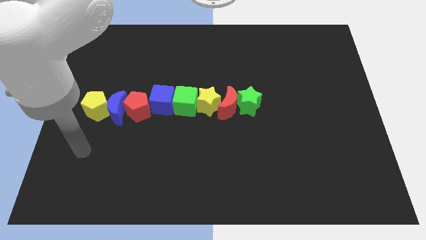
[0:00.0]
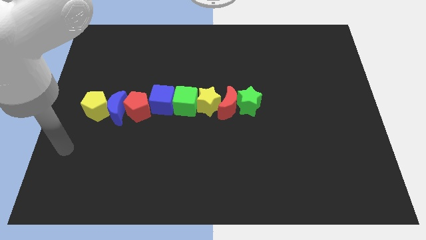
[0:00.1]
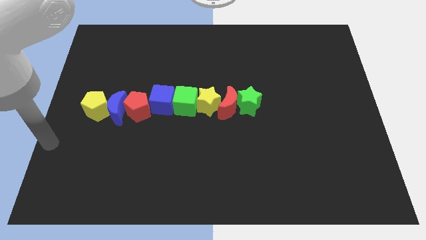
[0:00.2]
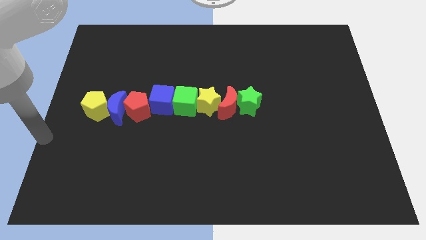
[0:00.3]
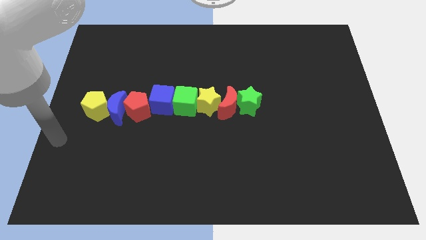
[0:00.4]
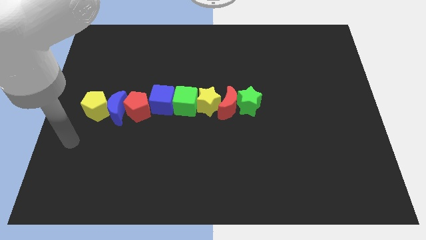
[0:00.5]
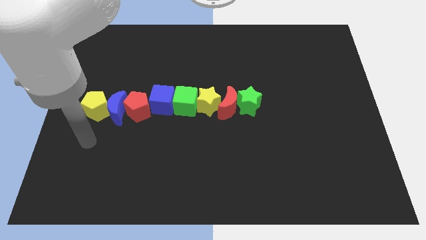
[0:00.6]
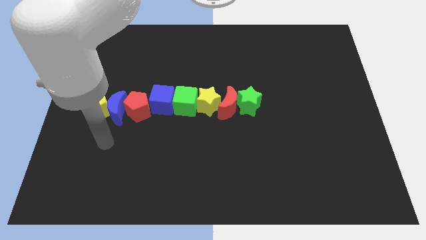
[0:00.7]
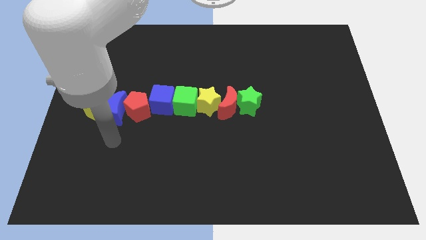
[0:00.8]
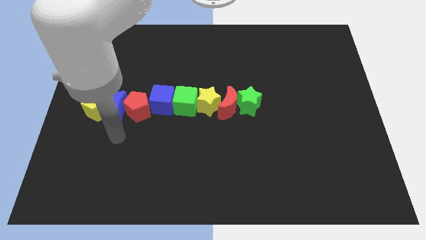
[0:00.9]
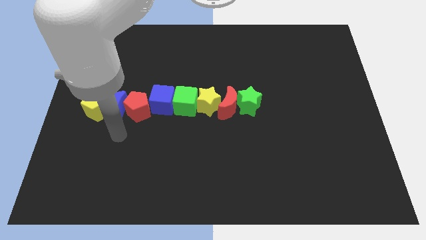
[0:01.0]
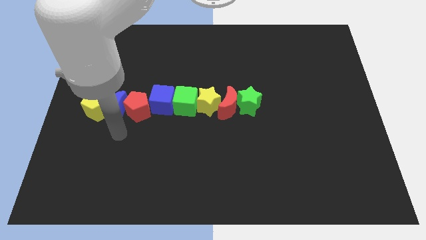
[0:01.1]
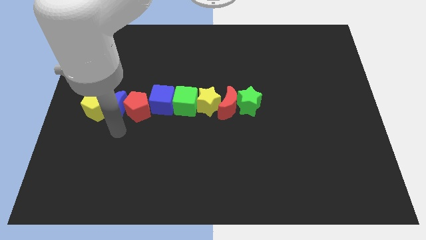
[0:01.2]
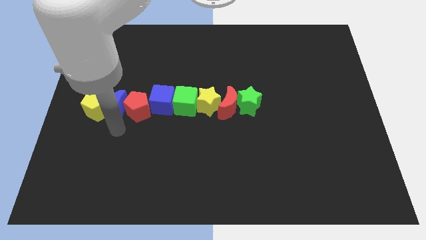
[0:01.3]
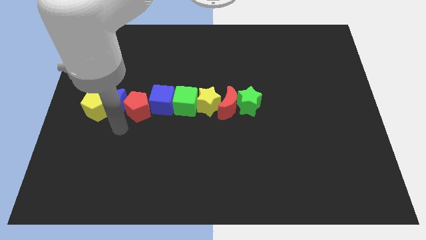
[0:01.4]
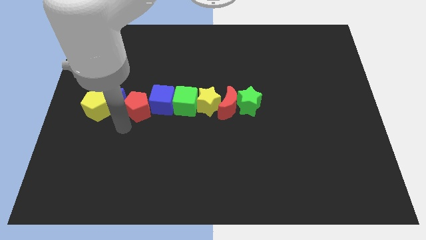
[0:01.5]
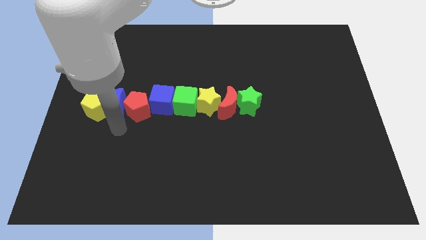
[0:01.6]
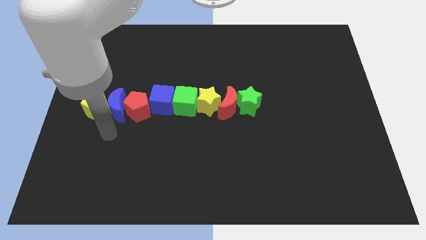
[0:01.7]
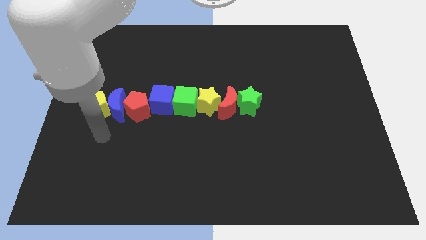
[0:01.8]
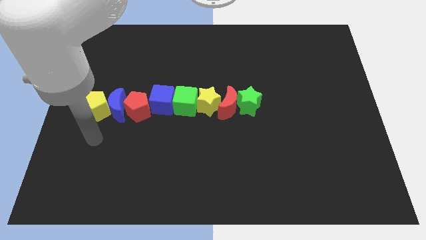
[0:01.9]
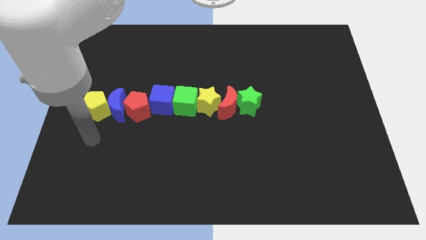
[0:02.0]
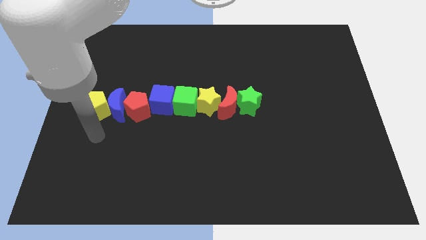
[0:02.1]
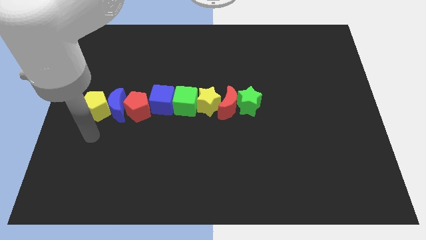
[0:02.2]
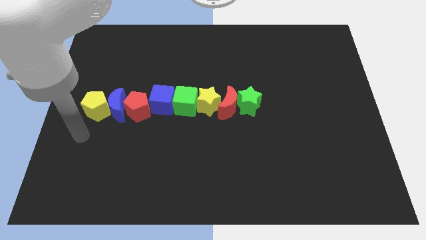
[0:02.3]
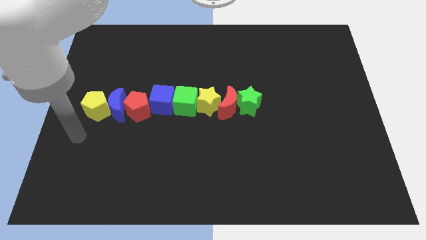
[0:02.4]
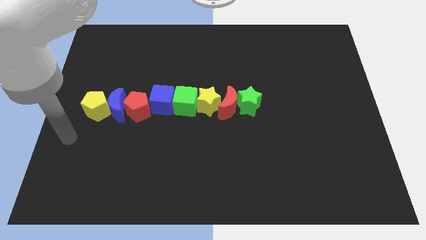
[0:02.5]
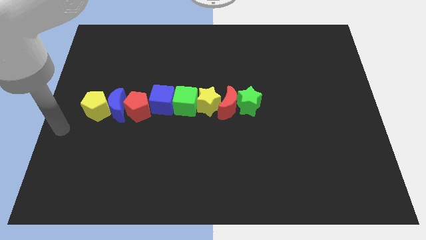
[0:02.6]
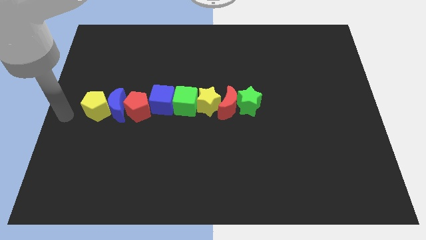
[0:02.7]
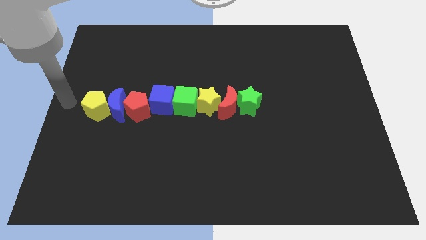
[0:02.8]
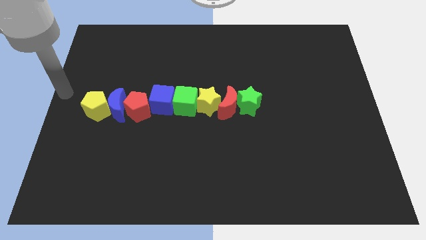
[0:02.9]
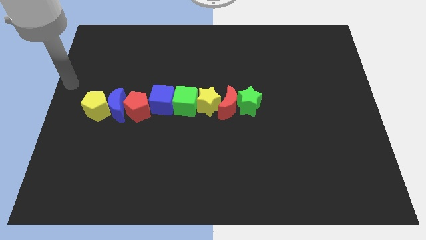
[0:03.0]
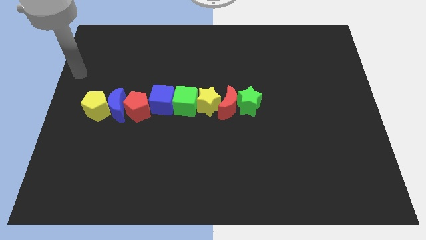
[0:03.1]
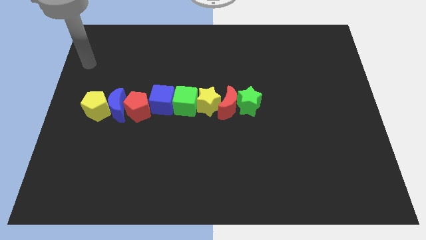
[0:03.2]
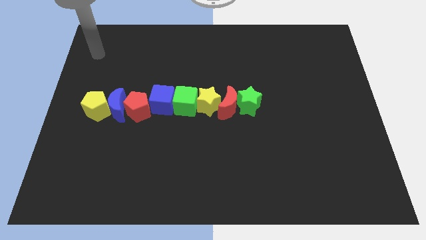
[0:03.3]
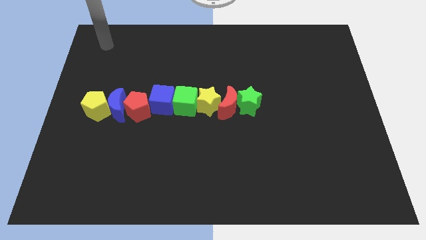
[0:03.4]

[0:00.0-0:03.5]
move your hand to the top left corner

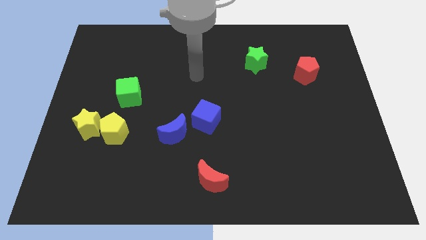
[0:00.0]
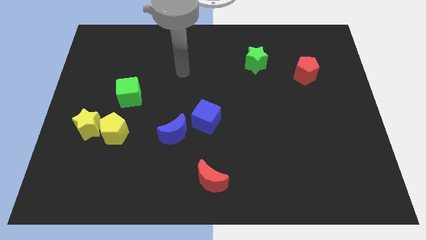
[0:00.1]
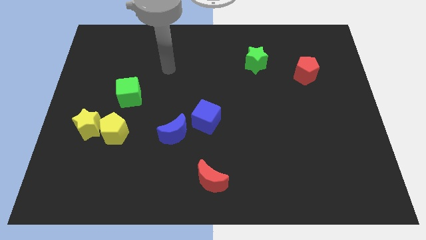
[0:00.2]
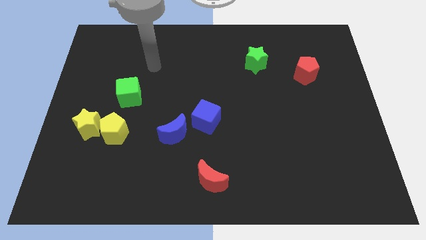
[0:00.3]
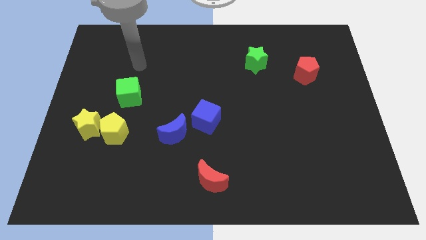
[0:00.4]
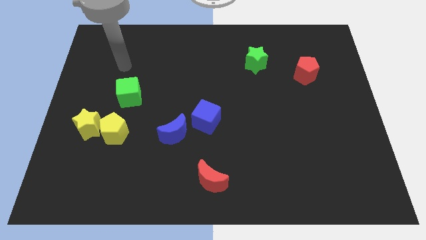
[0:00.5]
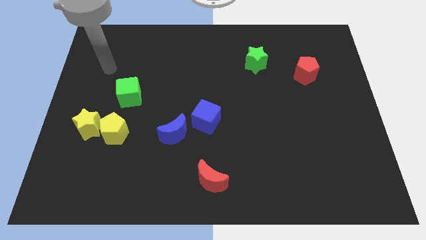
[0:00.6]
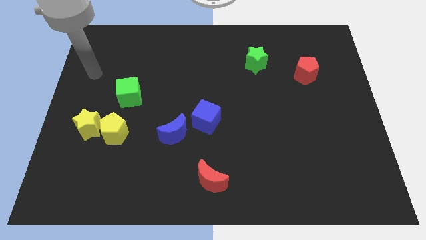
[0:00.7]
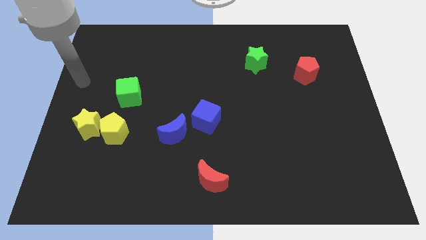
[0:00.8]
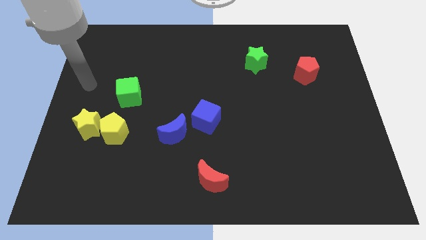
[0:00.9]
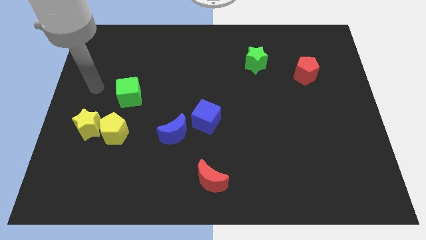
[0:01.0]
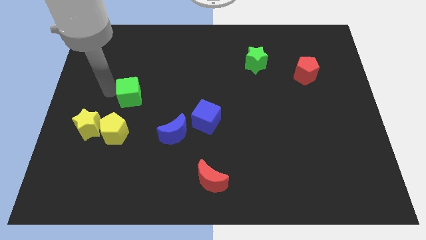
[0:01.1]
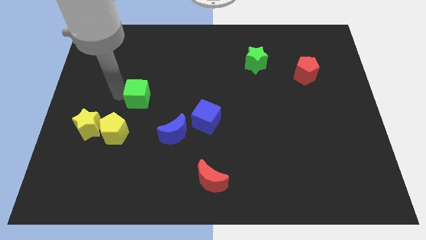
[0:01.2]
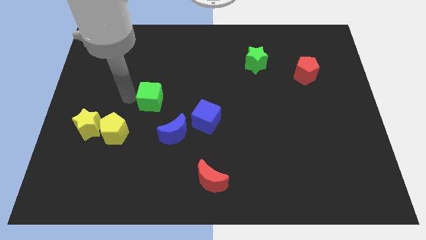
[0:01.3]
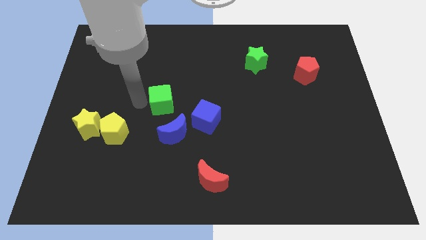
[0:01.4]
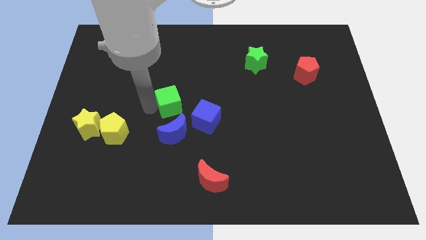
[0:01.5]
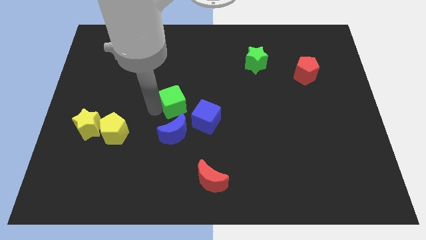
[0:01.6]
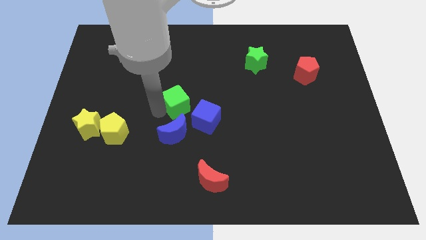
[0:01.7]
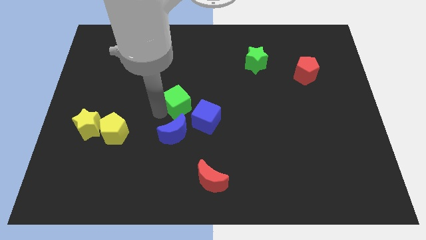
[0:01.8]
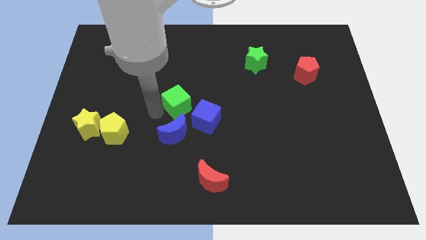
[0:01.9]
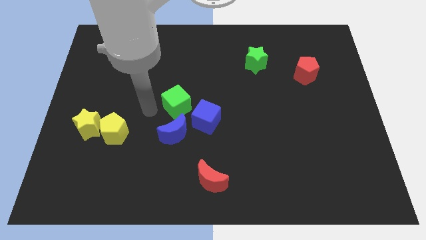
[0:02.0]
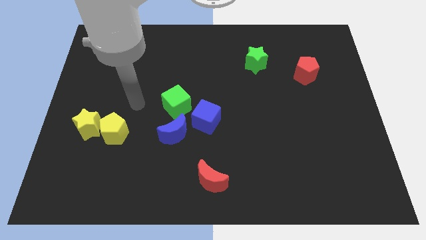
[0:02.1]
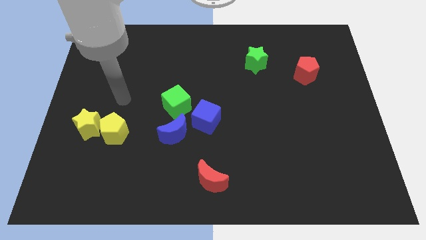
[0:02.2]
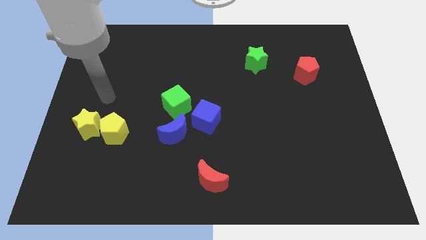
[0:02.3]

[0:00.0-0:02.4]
move the green cube to the top of the blue crescent

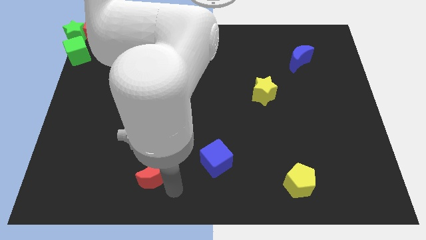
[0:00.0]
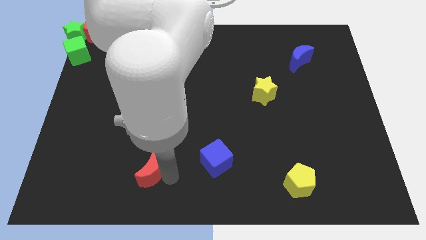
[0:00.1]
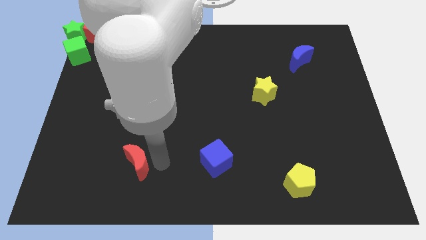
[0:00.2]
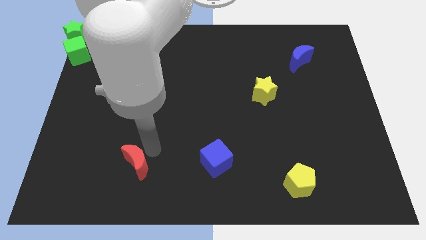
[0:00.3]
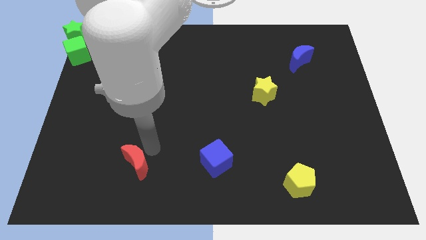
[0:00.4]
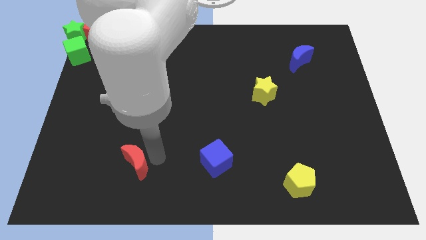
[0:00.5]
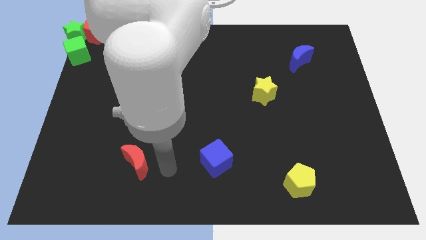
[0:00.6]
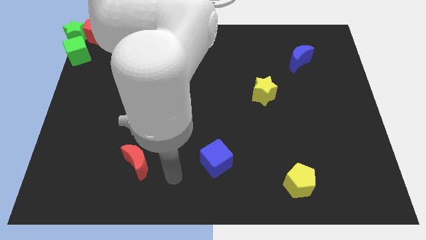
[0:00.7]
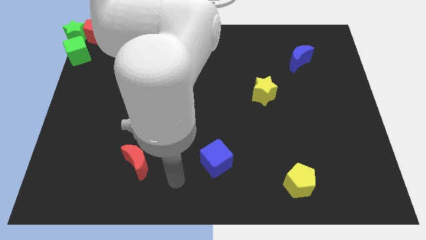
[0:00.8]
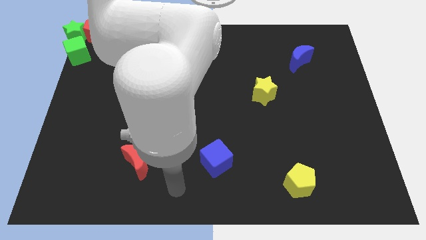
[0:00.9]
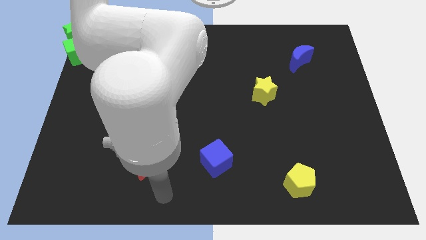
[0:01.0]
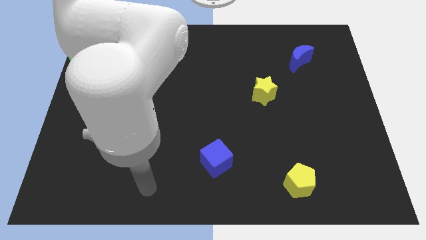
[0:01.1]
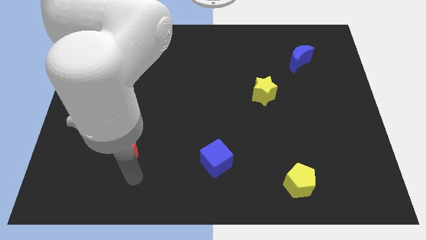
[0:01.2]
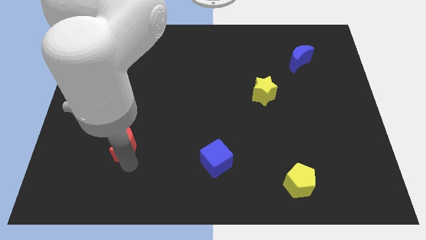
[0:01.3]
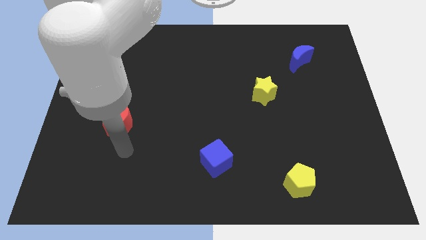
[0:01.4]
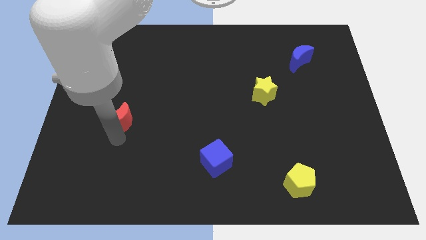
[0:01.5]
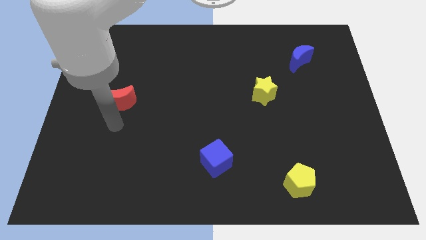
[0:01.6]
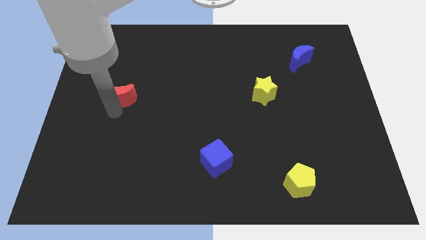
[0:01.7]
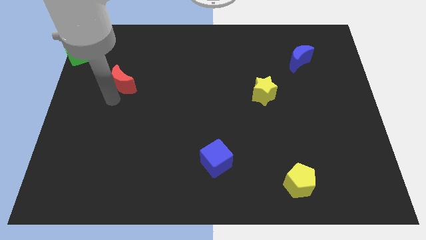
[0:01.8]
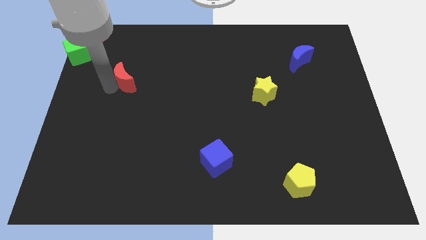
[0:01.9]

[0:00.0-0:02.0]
move the red moon towards the red pentagon

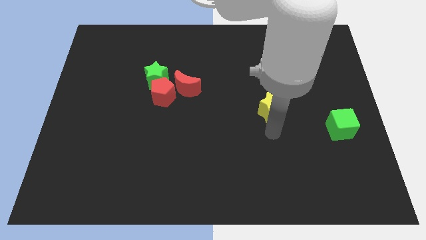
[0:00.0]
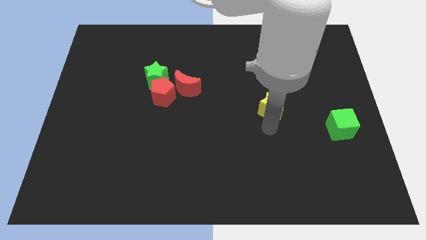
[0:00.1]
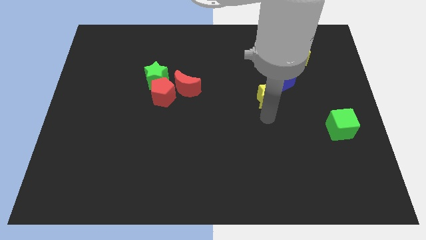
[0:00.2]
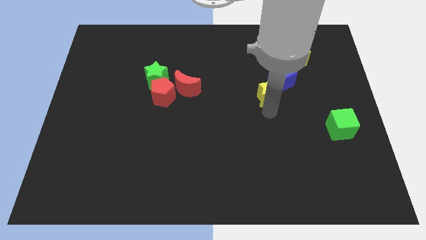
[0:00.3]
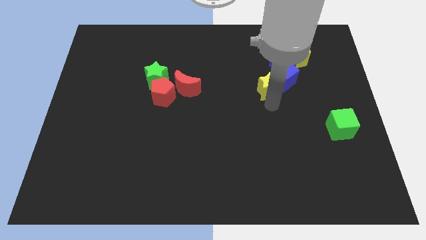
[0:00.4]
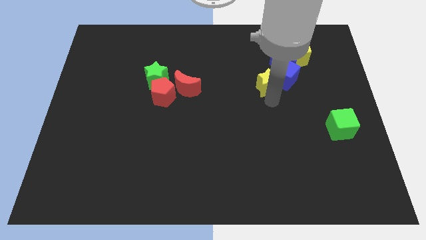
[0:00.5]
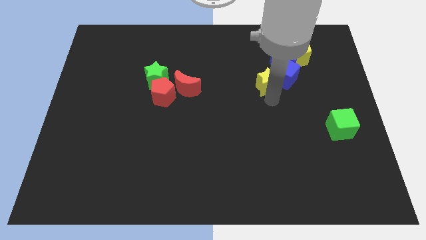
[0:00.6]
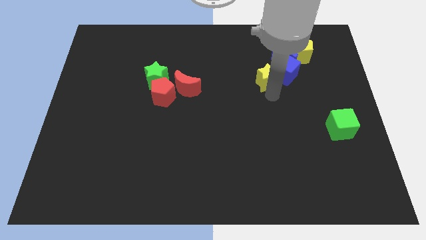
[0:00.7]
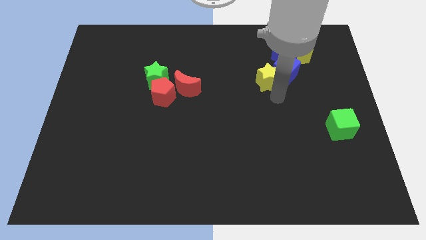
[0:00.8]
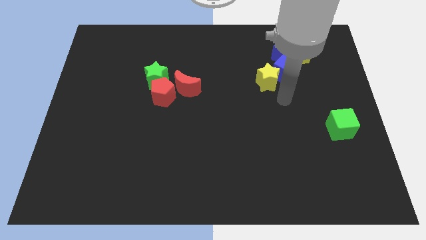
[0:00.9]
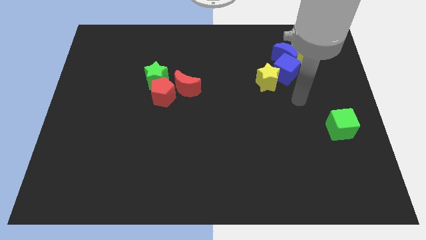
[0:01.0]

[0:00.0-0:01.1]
push the yellow star to the left of the blue cube
